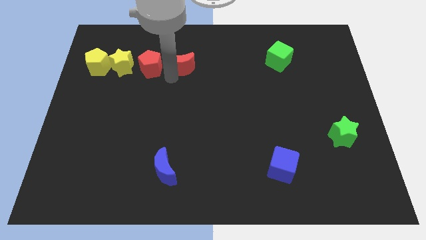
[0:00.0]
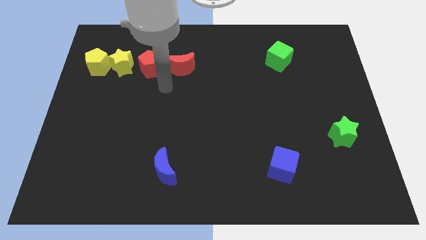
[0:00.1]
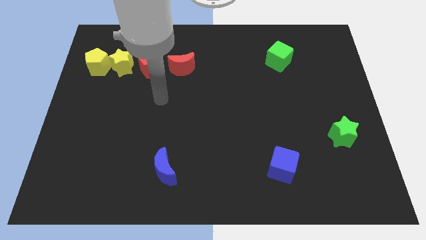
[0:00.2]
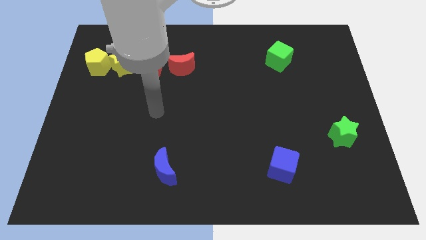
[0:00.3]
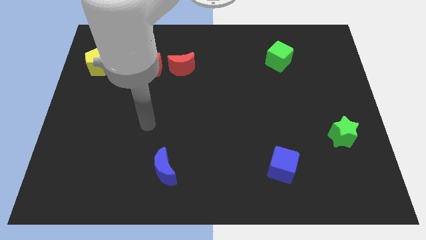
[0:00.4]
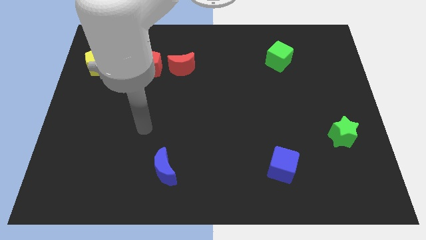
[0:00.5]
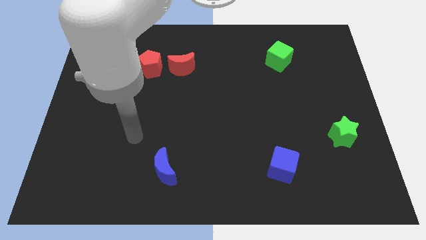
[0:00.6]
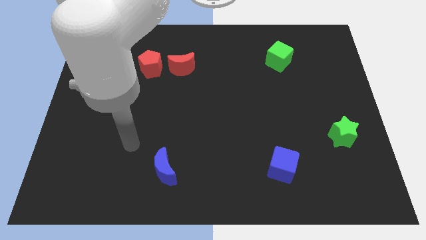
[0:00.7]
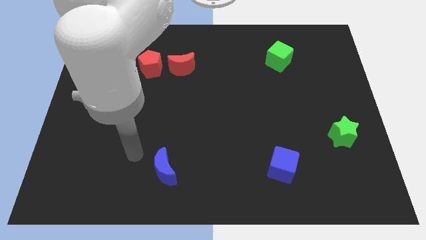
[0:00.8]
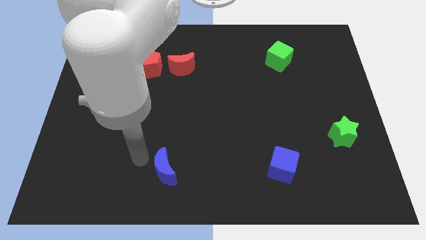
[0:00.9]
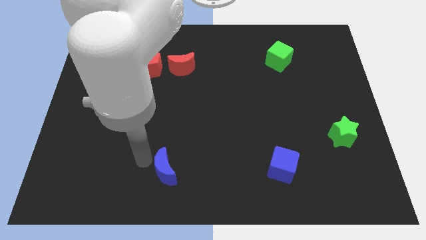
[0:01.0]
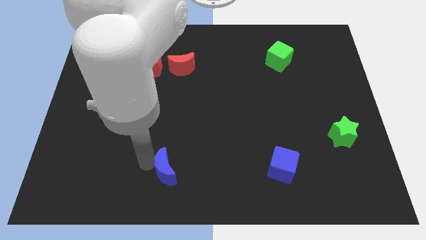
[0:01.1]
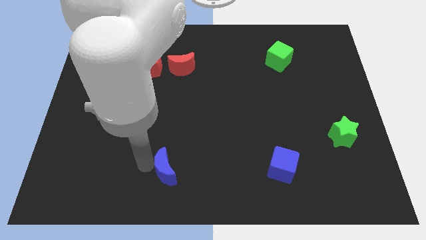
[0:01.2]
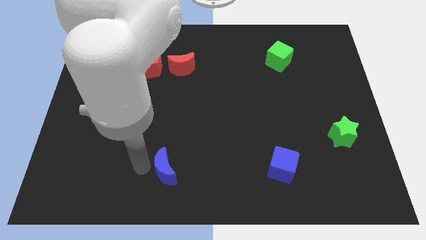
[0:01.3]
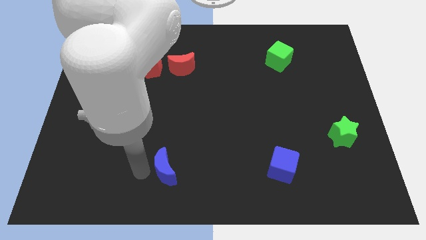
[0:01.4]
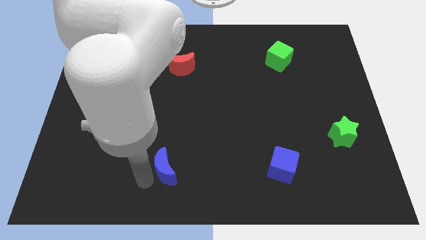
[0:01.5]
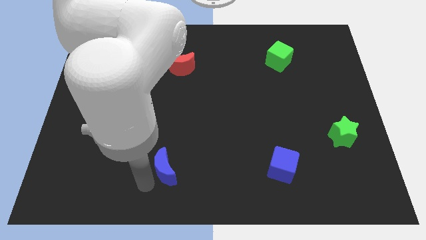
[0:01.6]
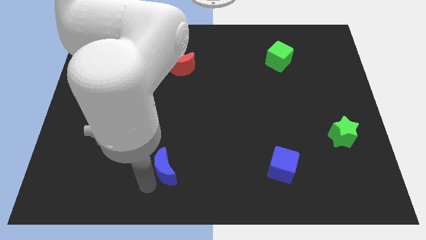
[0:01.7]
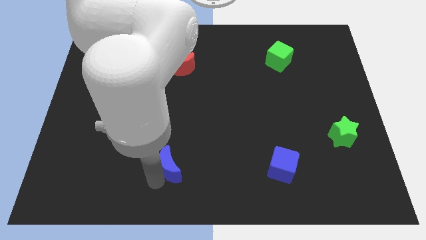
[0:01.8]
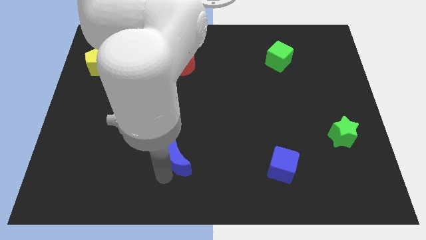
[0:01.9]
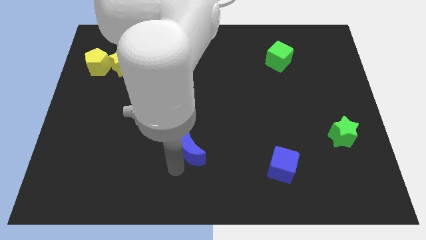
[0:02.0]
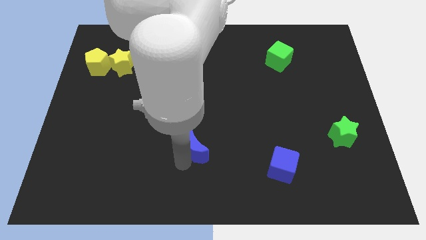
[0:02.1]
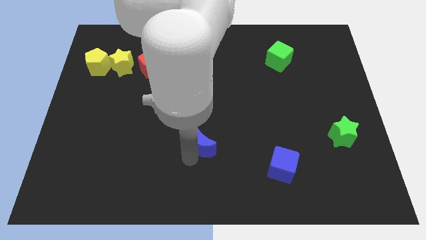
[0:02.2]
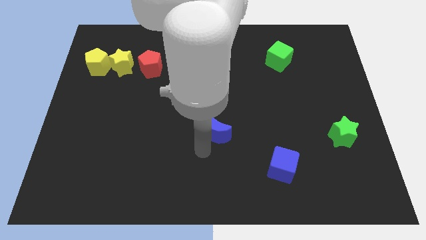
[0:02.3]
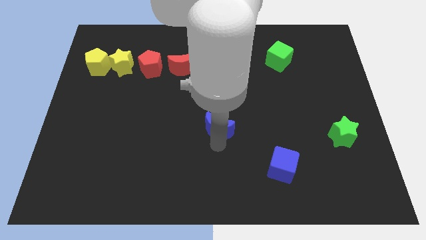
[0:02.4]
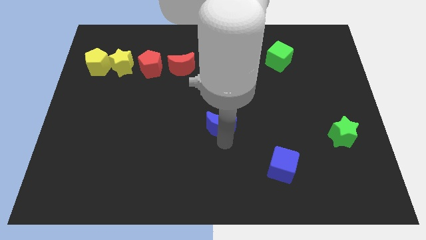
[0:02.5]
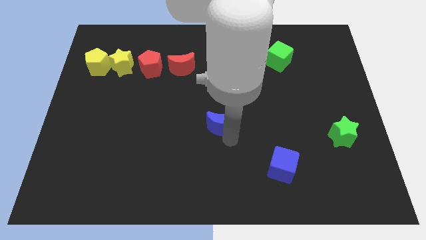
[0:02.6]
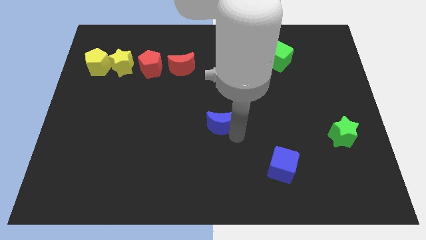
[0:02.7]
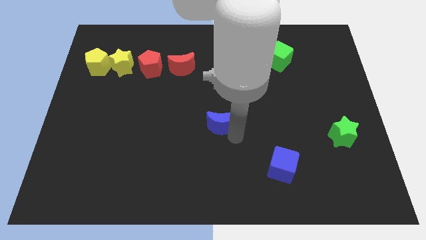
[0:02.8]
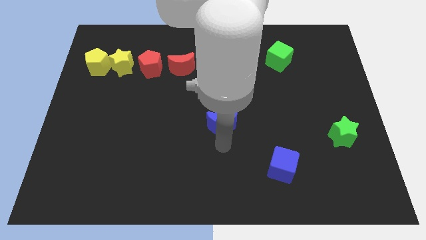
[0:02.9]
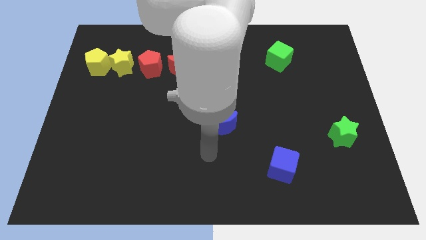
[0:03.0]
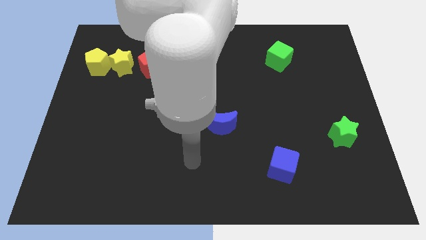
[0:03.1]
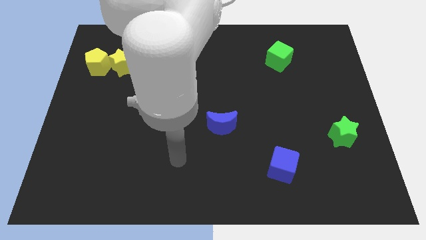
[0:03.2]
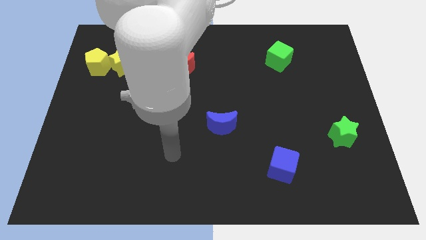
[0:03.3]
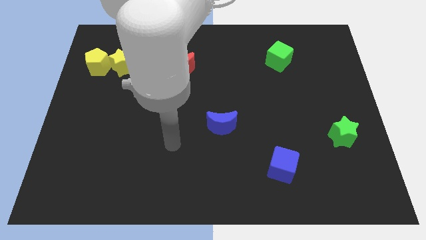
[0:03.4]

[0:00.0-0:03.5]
push the blue crescent in between the red crescent and blue cube

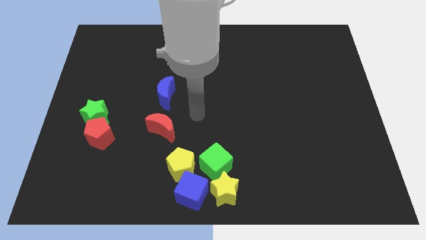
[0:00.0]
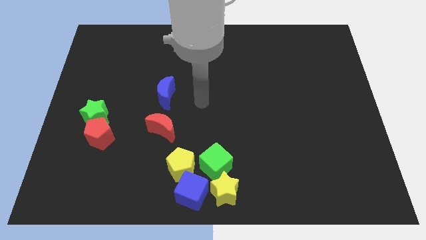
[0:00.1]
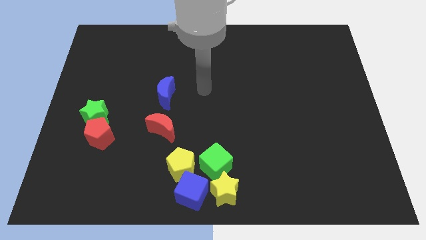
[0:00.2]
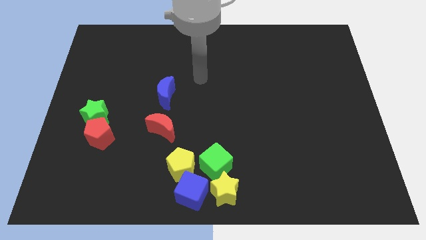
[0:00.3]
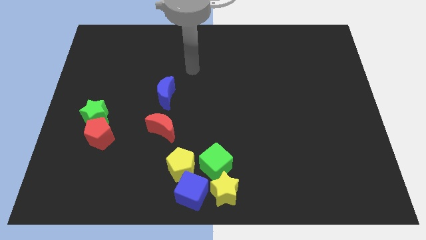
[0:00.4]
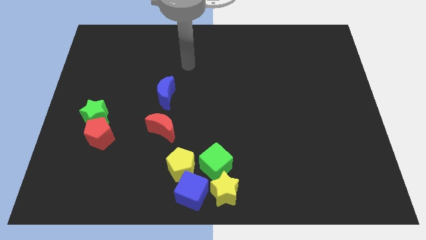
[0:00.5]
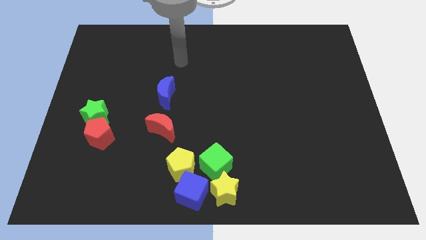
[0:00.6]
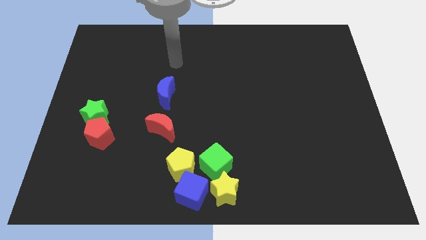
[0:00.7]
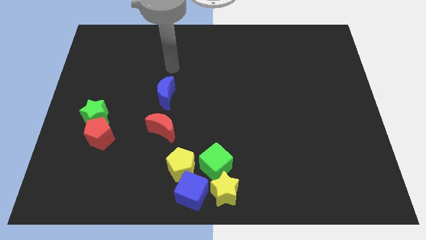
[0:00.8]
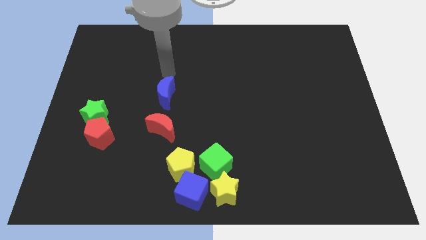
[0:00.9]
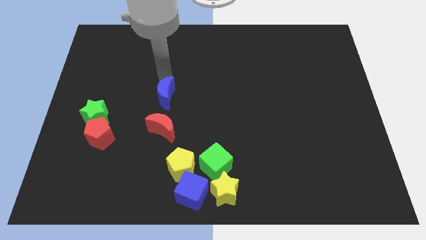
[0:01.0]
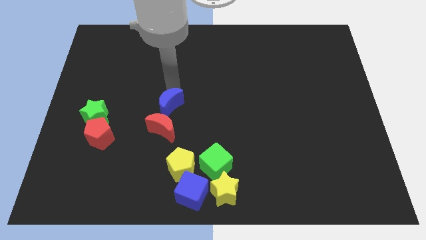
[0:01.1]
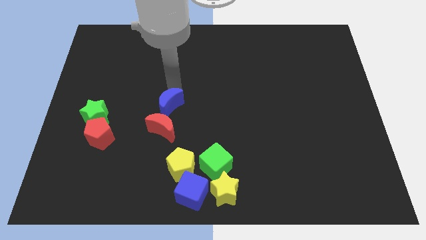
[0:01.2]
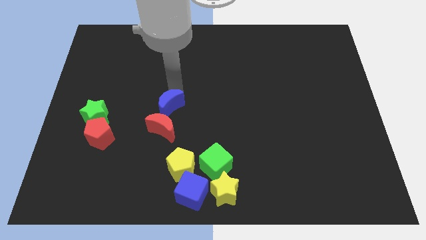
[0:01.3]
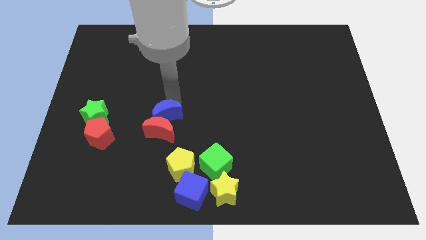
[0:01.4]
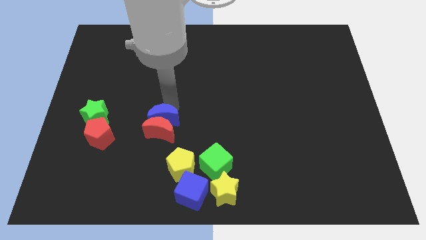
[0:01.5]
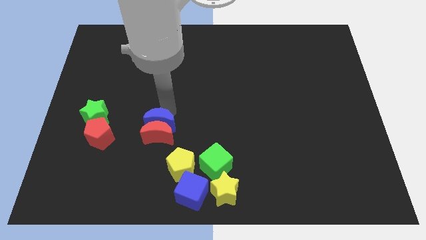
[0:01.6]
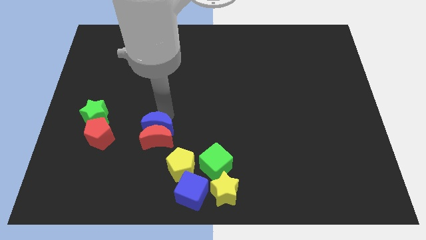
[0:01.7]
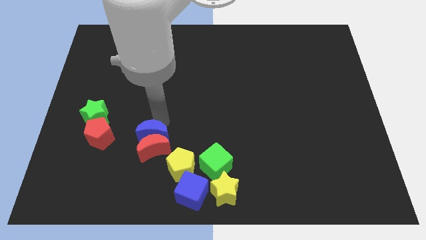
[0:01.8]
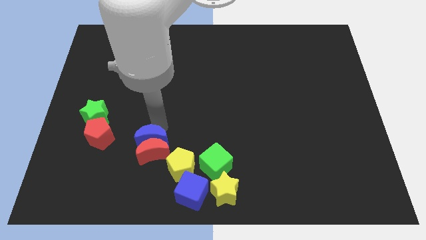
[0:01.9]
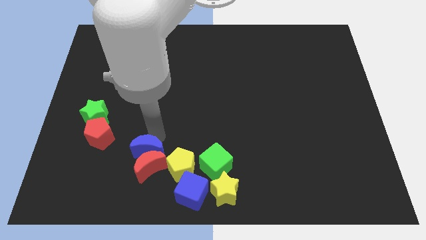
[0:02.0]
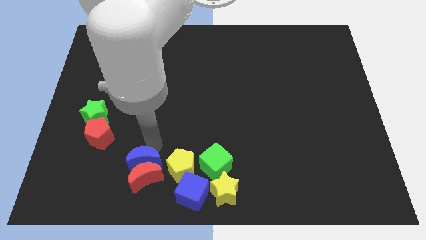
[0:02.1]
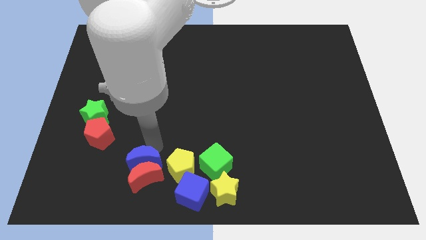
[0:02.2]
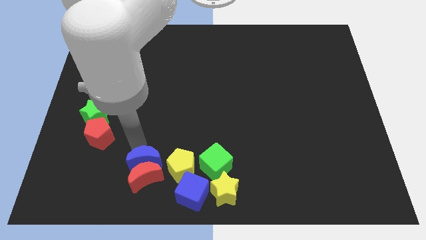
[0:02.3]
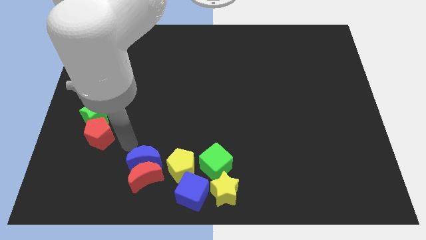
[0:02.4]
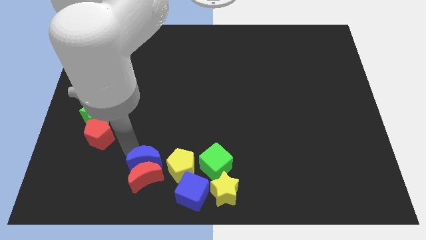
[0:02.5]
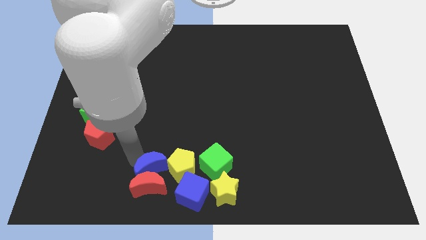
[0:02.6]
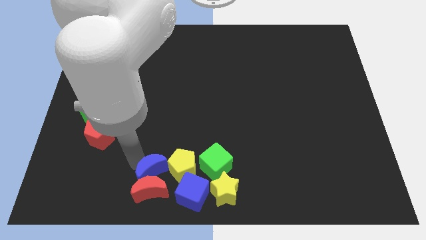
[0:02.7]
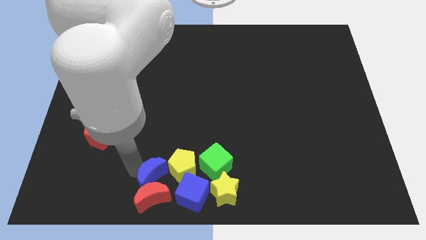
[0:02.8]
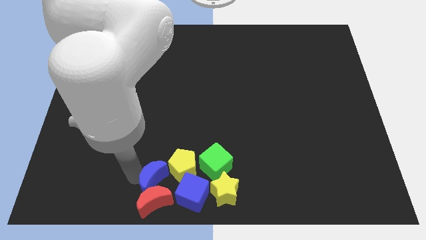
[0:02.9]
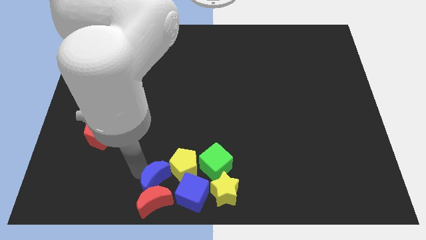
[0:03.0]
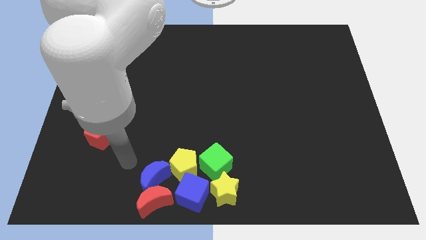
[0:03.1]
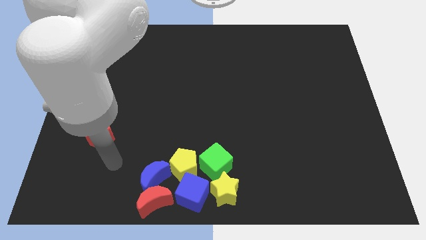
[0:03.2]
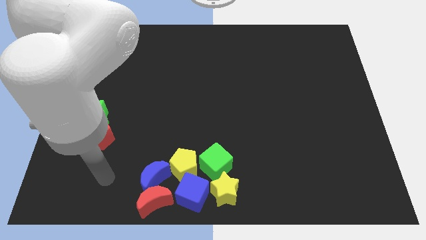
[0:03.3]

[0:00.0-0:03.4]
add the blue moon and red moon to the group of blocks at the bottom center of the board

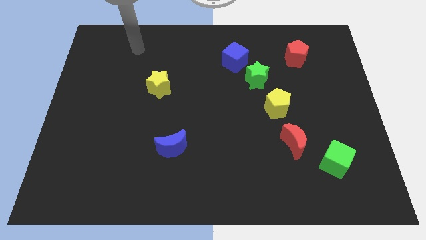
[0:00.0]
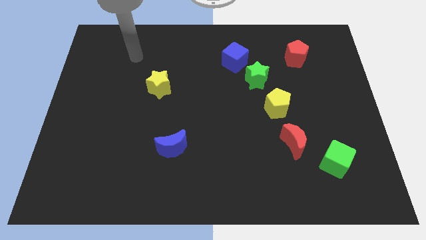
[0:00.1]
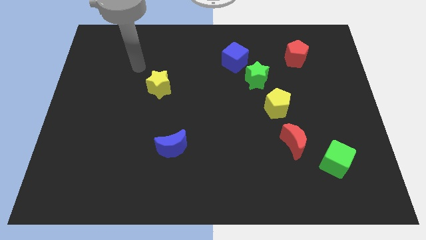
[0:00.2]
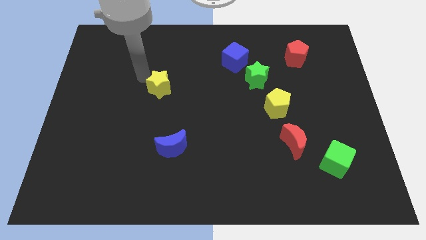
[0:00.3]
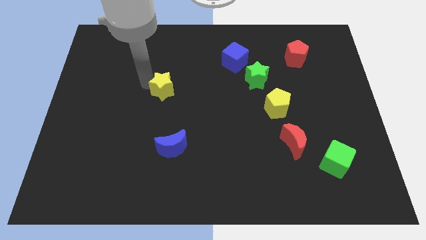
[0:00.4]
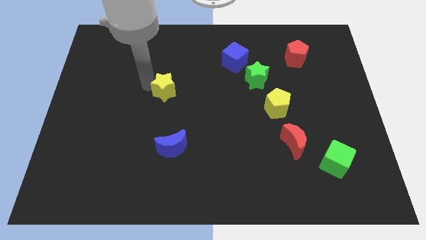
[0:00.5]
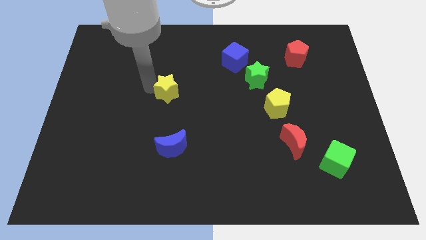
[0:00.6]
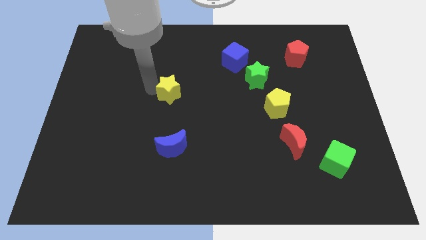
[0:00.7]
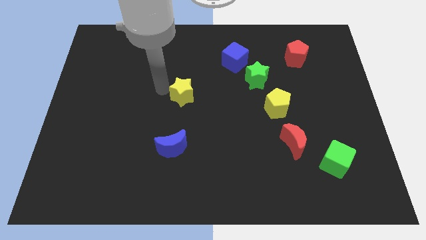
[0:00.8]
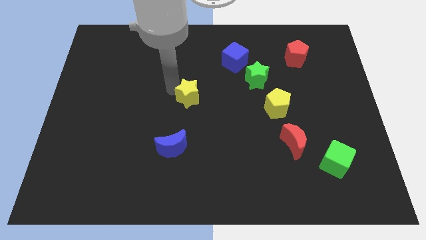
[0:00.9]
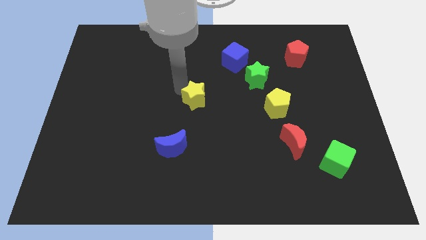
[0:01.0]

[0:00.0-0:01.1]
push the yellow star to the center of the board

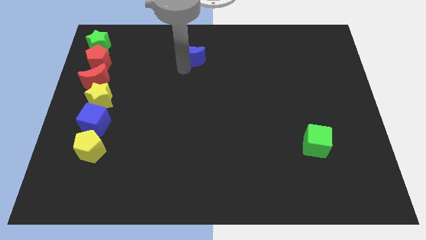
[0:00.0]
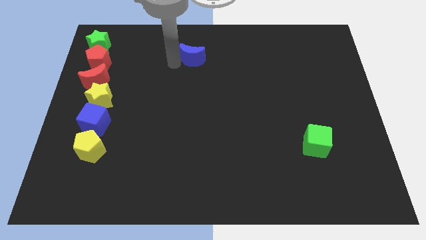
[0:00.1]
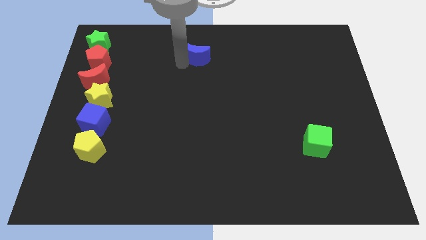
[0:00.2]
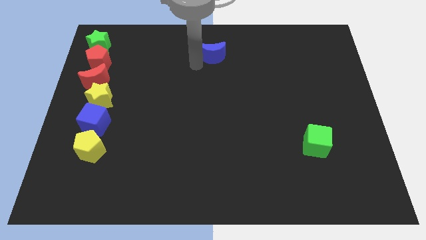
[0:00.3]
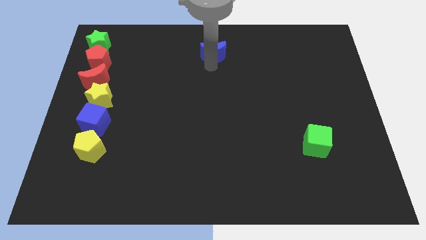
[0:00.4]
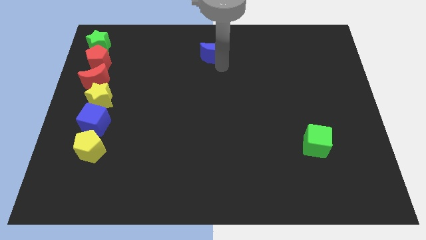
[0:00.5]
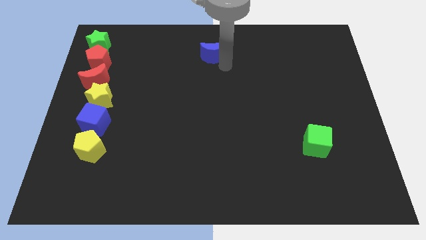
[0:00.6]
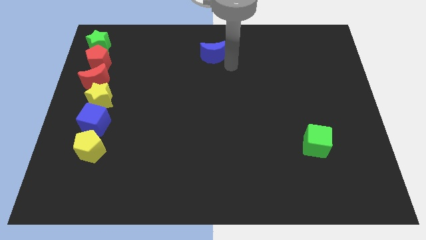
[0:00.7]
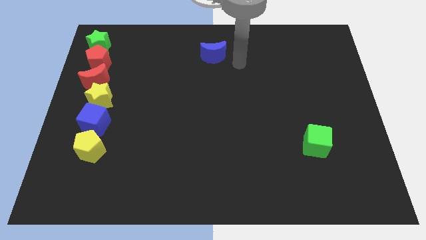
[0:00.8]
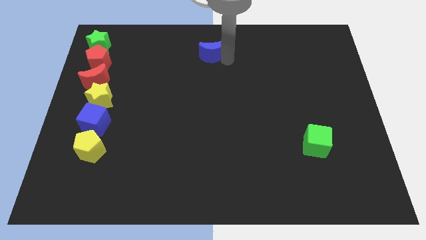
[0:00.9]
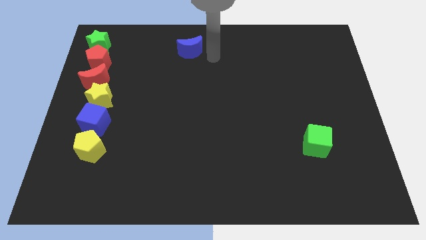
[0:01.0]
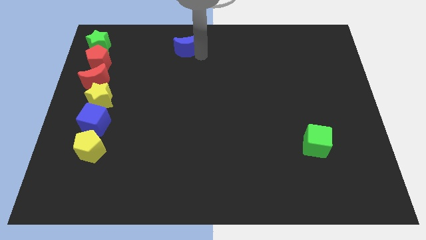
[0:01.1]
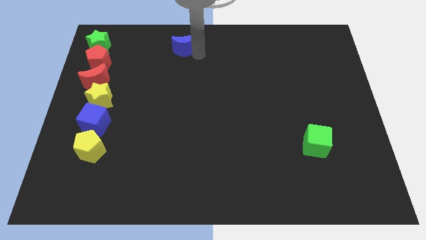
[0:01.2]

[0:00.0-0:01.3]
move the blue crescent to the top of the board
